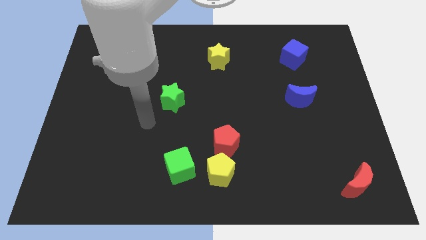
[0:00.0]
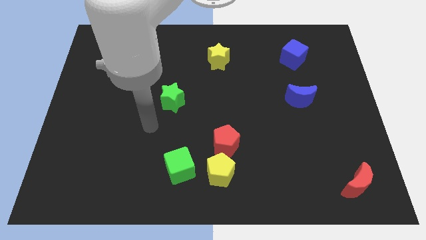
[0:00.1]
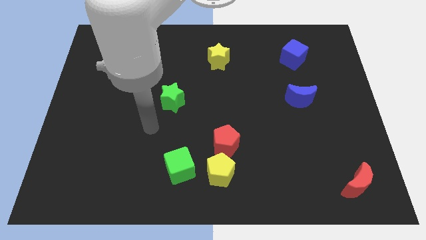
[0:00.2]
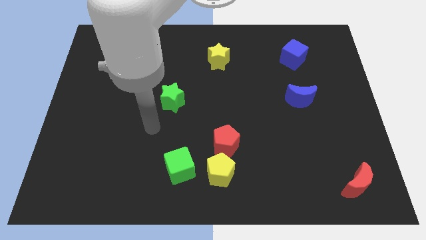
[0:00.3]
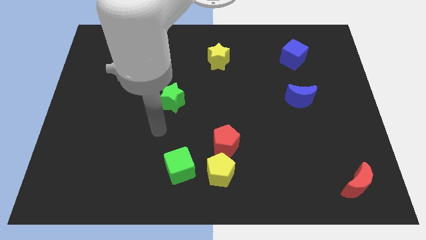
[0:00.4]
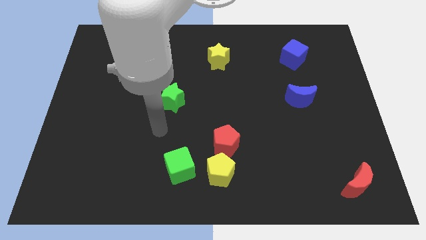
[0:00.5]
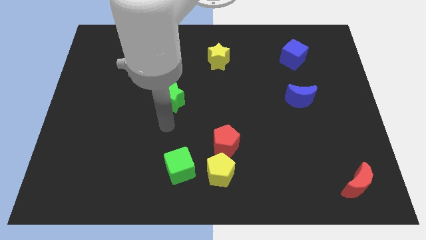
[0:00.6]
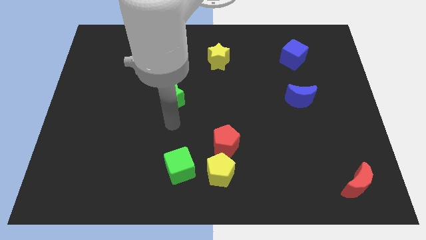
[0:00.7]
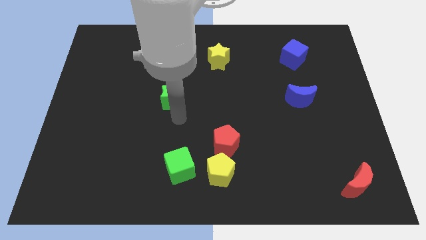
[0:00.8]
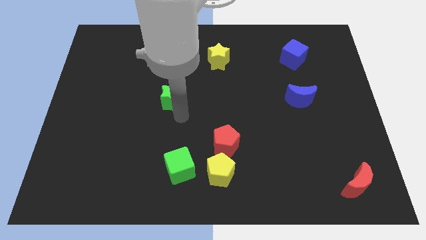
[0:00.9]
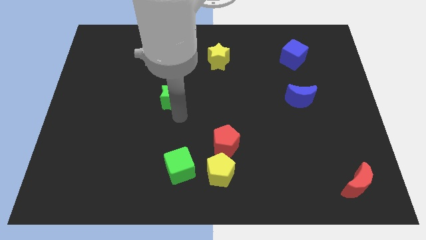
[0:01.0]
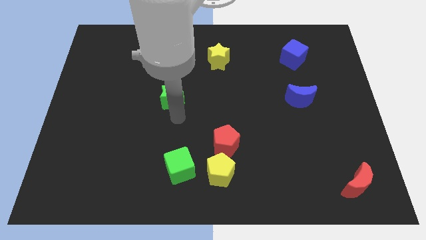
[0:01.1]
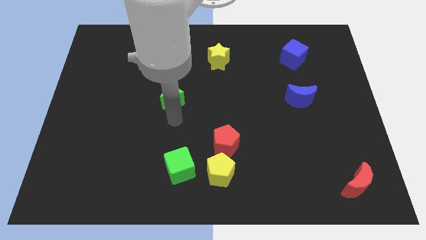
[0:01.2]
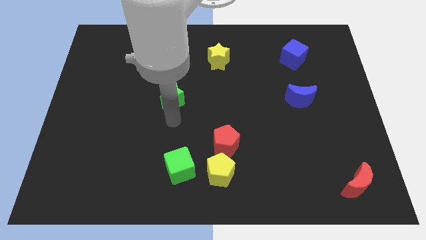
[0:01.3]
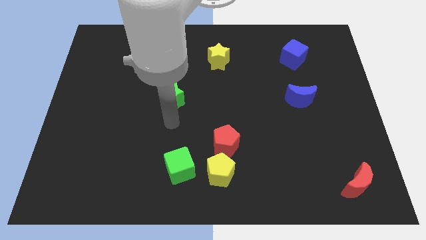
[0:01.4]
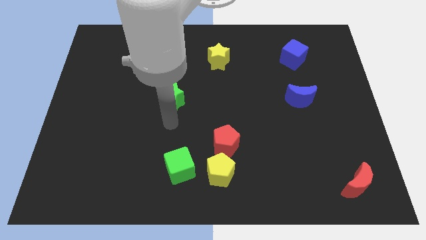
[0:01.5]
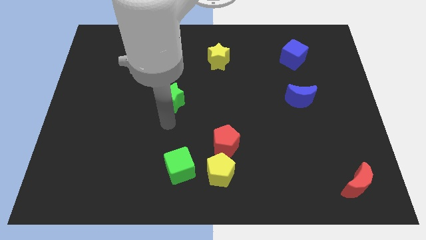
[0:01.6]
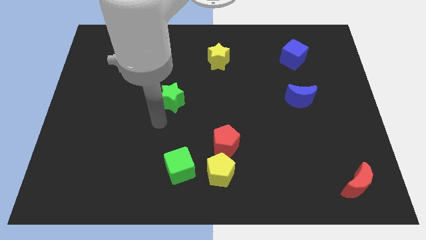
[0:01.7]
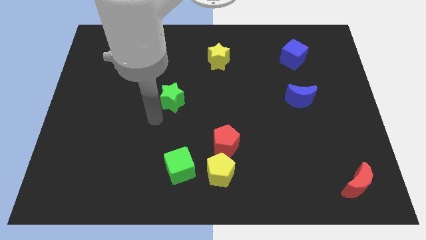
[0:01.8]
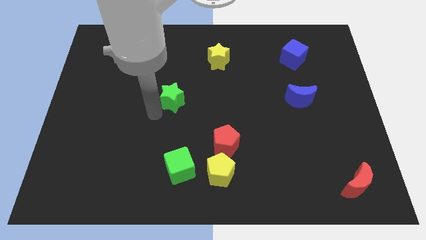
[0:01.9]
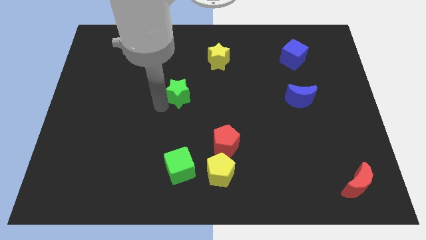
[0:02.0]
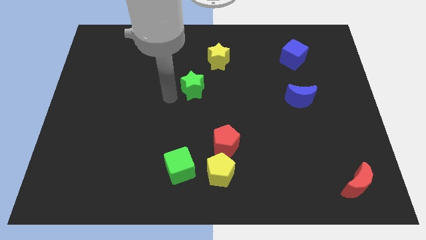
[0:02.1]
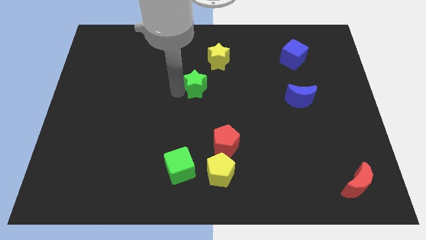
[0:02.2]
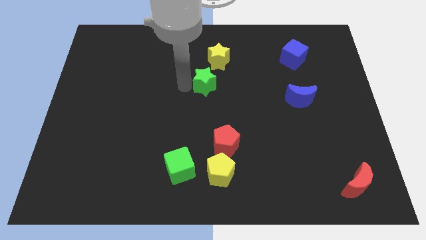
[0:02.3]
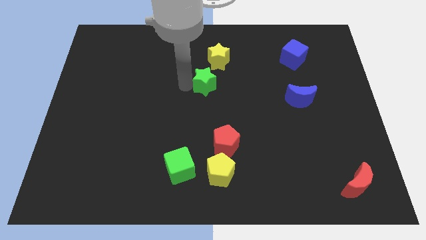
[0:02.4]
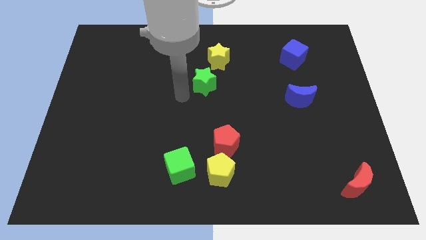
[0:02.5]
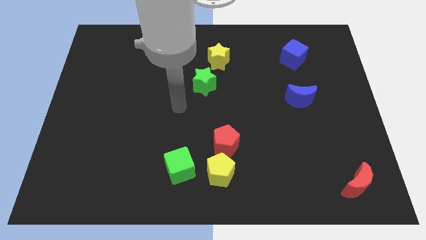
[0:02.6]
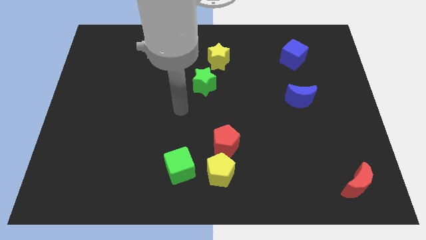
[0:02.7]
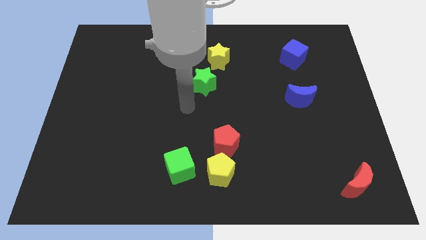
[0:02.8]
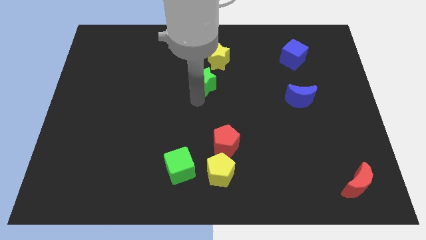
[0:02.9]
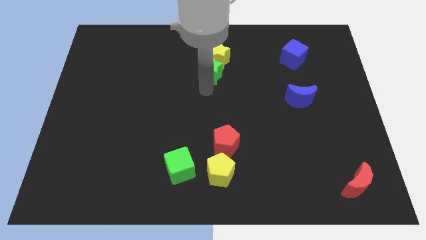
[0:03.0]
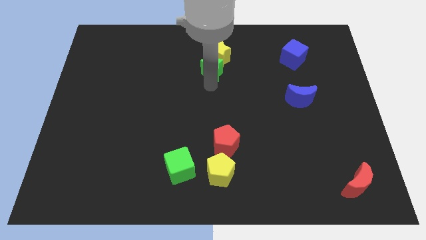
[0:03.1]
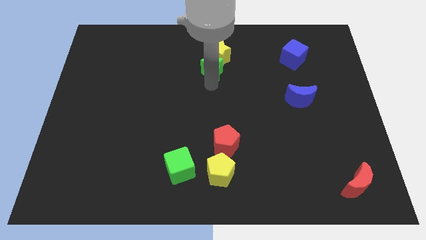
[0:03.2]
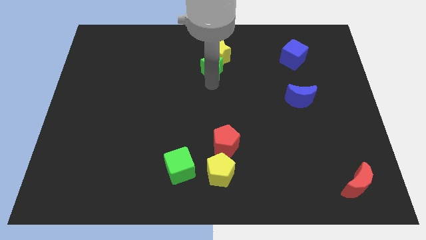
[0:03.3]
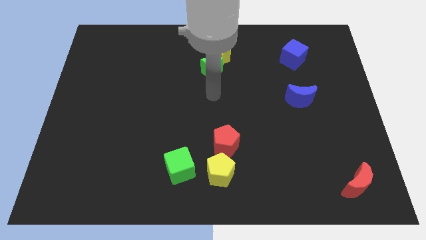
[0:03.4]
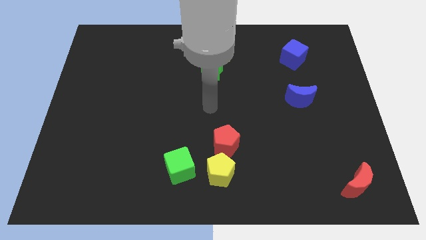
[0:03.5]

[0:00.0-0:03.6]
place the green star below the yellow star

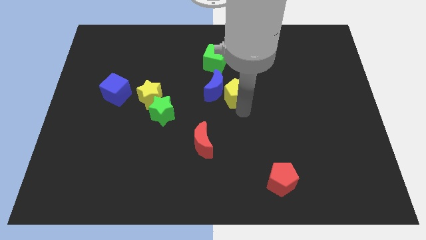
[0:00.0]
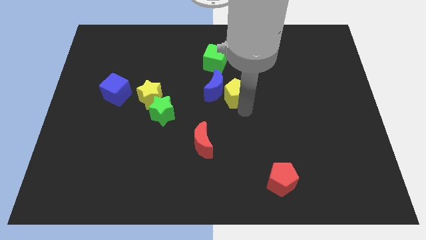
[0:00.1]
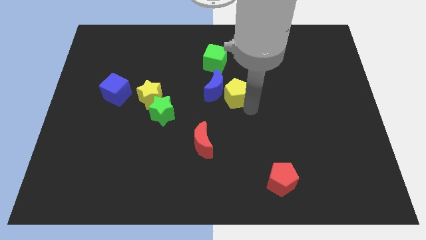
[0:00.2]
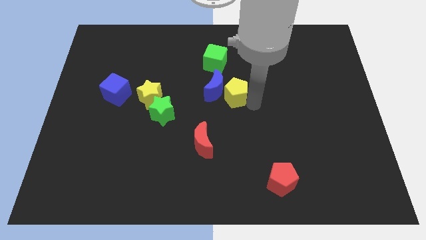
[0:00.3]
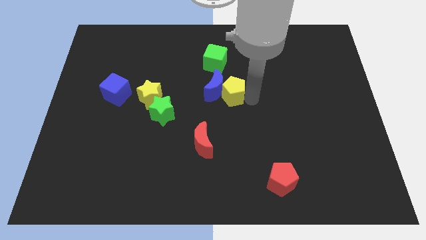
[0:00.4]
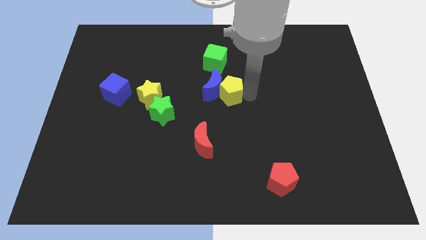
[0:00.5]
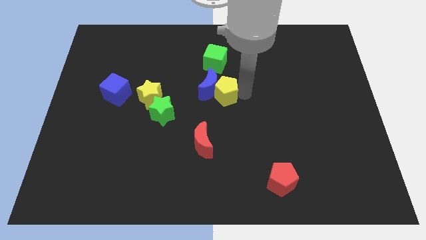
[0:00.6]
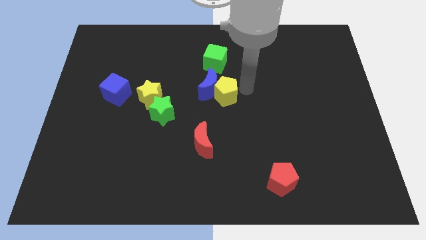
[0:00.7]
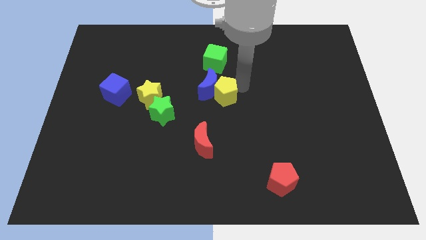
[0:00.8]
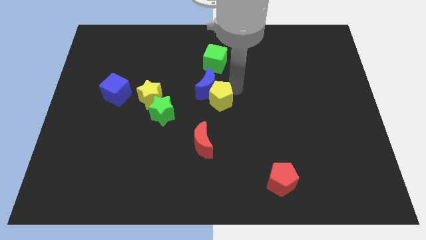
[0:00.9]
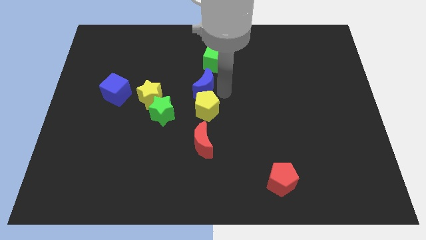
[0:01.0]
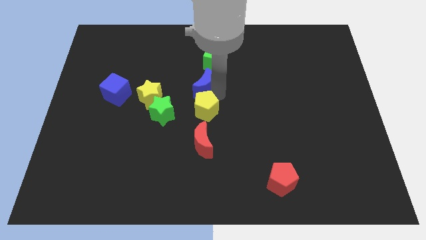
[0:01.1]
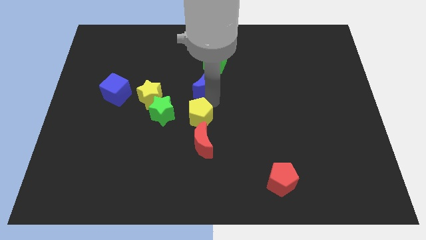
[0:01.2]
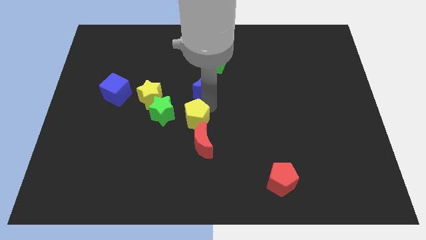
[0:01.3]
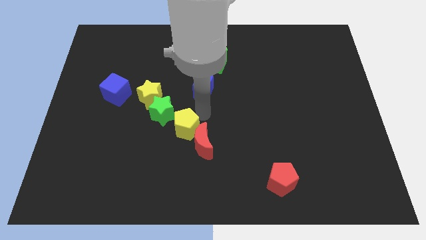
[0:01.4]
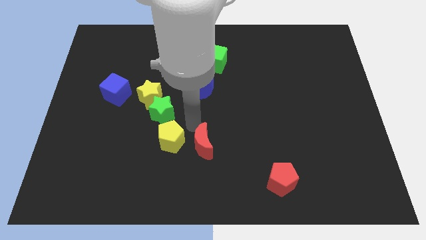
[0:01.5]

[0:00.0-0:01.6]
place the yellow pentagon in between the green star and the red moon

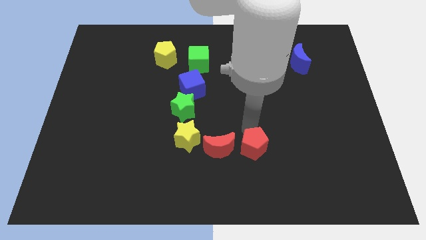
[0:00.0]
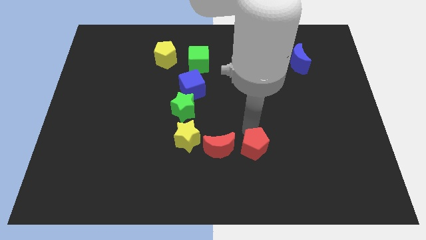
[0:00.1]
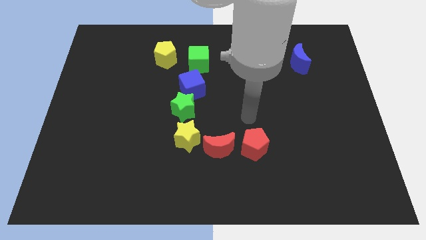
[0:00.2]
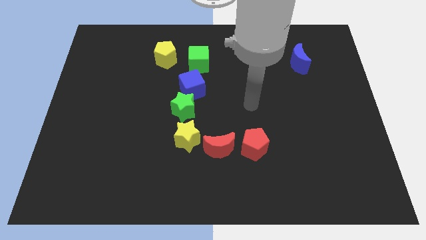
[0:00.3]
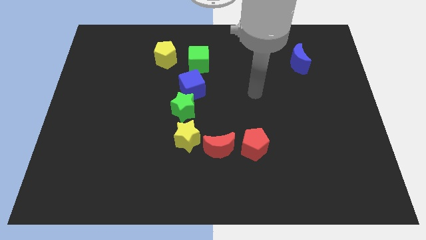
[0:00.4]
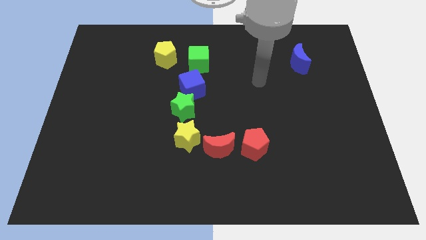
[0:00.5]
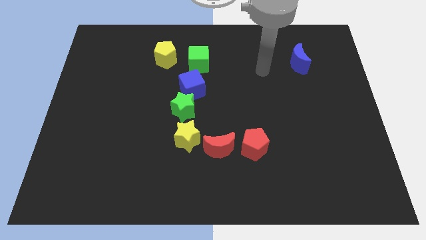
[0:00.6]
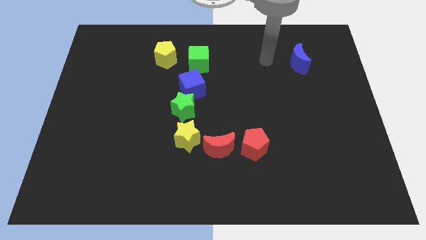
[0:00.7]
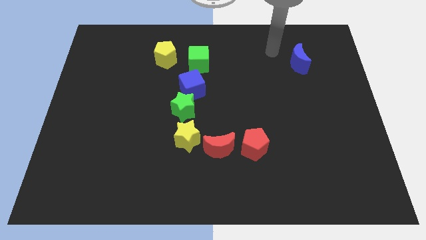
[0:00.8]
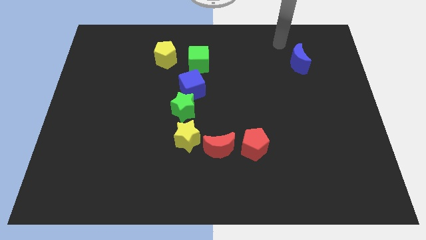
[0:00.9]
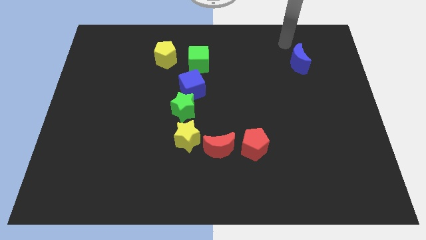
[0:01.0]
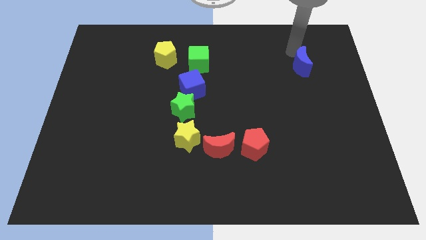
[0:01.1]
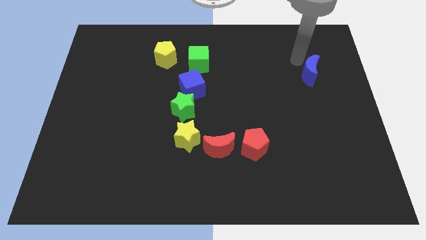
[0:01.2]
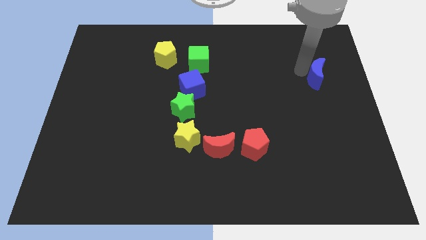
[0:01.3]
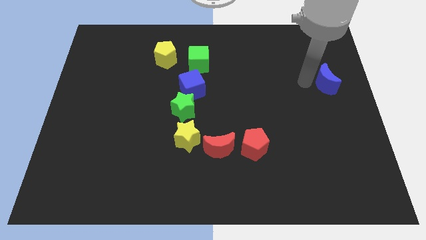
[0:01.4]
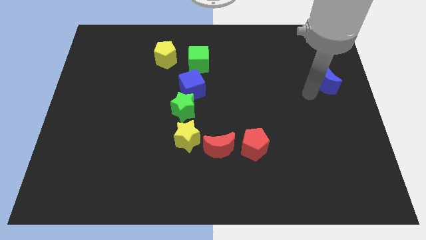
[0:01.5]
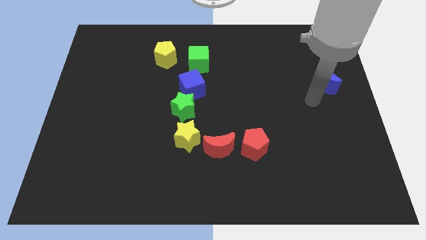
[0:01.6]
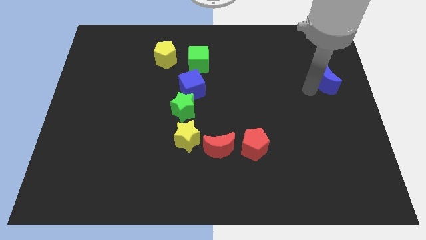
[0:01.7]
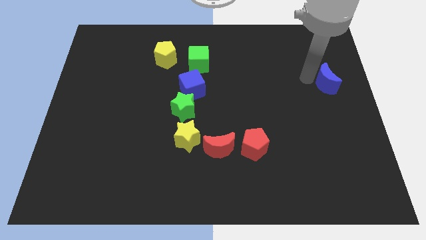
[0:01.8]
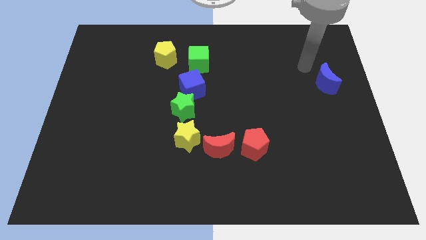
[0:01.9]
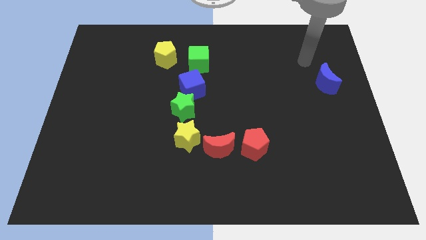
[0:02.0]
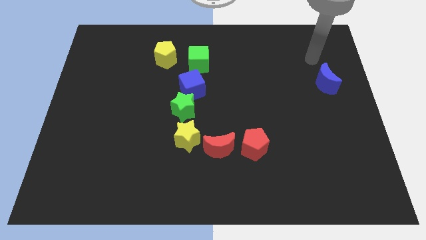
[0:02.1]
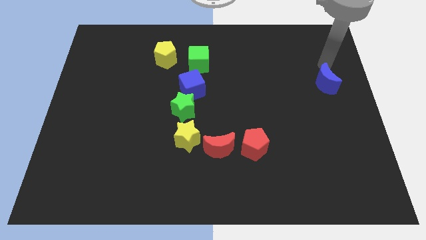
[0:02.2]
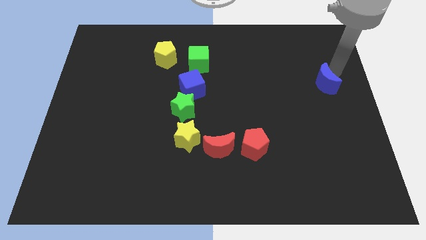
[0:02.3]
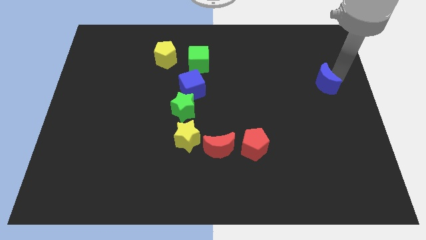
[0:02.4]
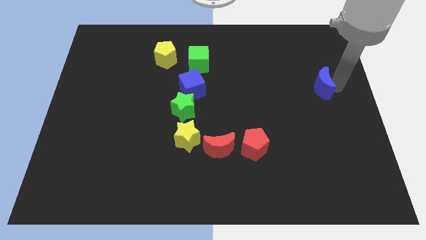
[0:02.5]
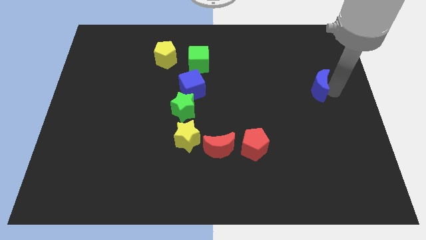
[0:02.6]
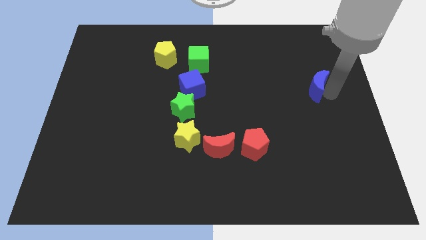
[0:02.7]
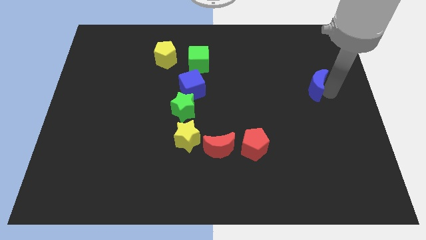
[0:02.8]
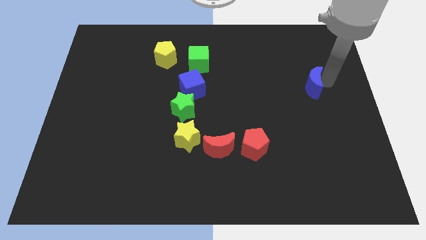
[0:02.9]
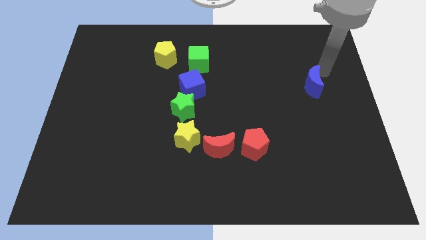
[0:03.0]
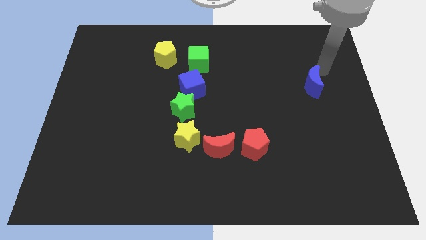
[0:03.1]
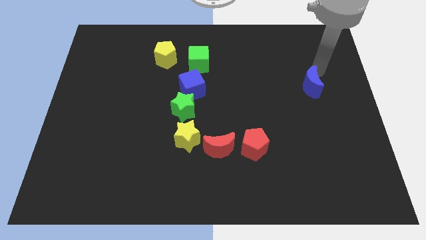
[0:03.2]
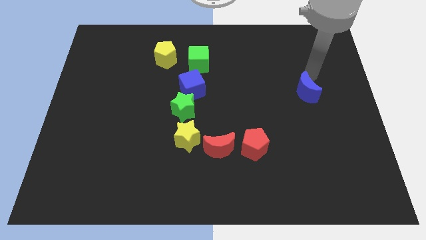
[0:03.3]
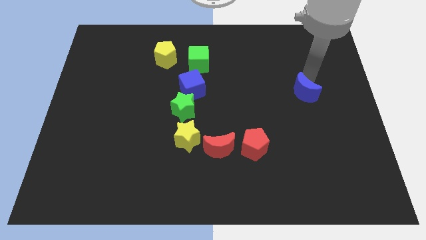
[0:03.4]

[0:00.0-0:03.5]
place the blue moon diagonally top right to the red pentagon

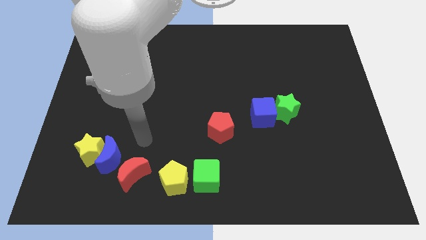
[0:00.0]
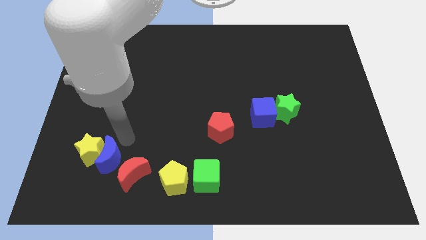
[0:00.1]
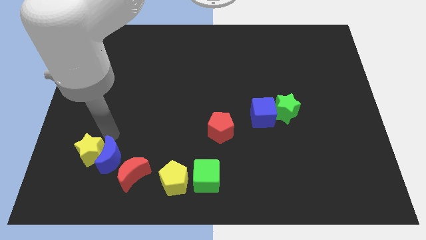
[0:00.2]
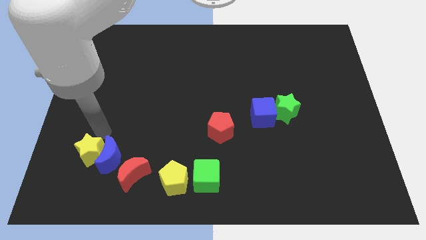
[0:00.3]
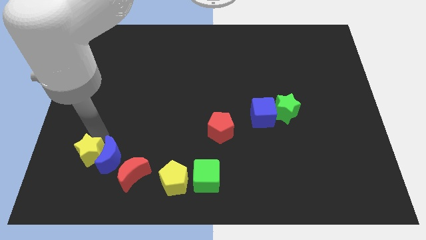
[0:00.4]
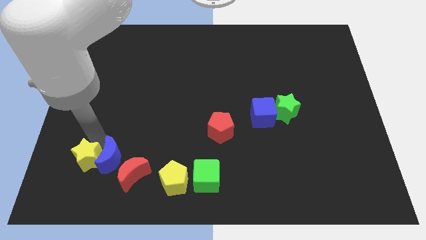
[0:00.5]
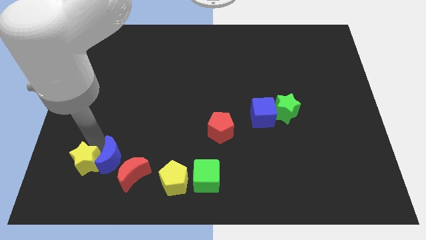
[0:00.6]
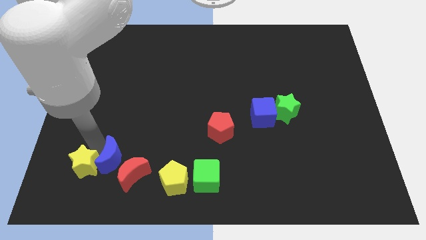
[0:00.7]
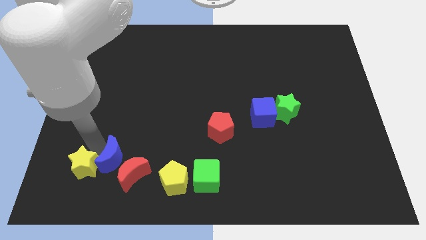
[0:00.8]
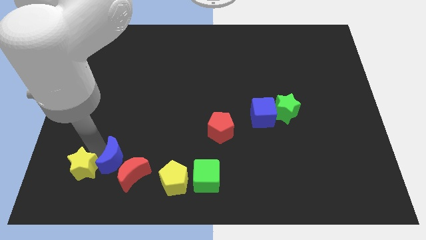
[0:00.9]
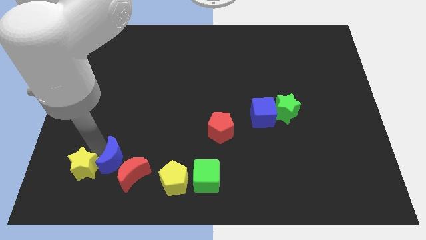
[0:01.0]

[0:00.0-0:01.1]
push the yellow star slightly to the bottom left side of blue moon
